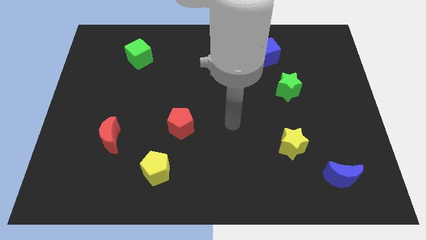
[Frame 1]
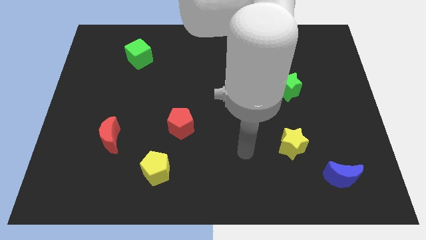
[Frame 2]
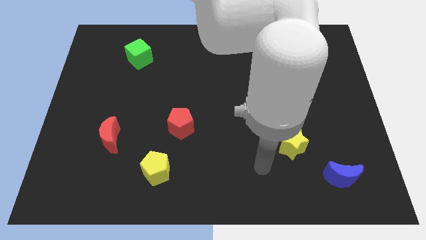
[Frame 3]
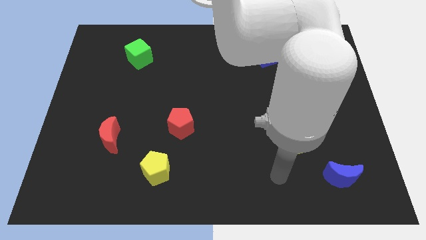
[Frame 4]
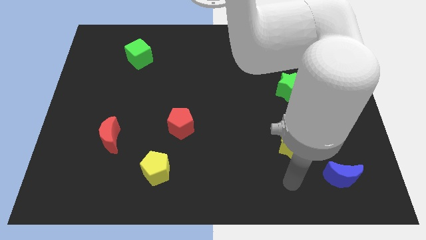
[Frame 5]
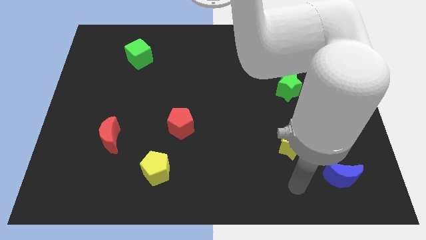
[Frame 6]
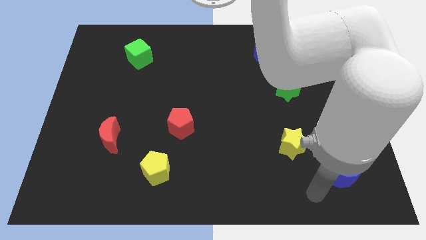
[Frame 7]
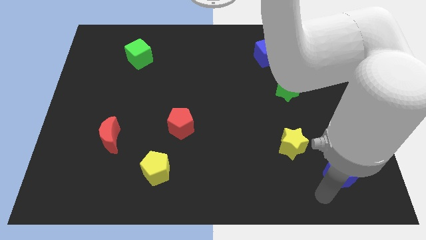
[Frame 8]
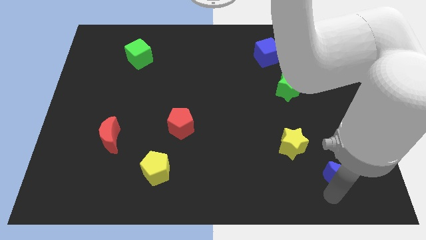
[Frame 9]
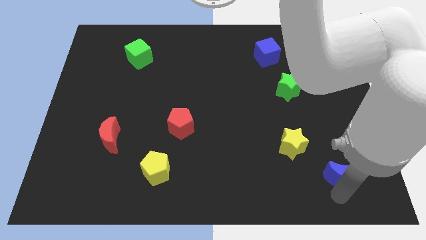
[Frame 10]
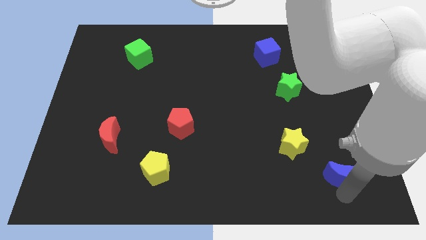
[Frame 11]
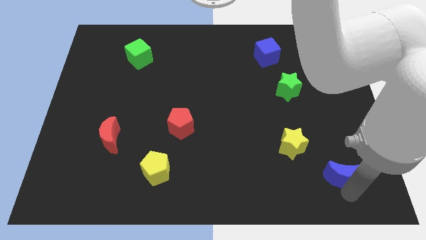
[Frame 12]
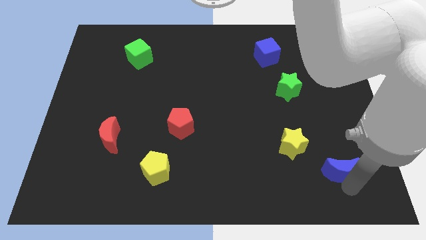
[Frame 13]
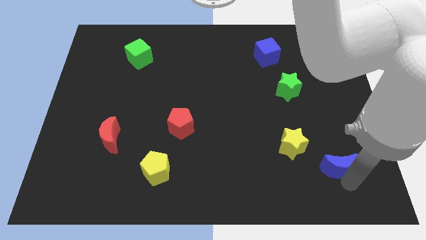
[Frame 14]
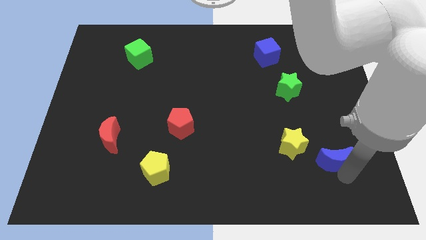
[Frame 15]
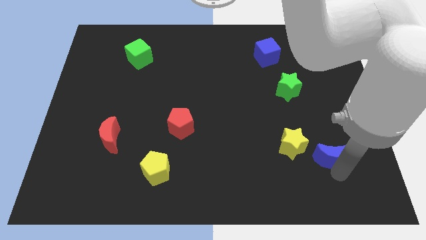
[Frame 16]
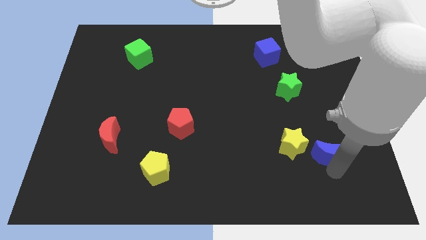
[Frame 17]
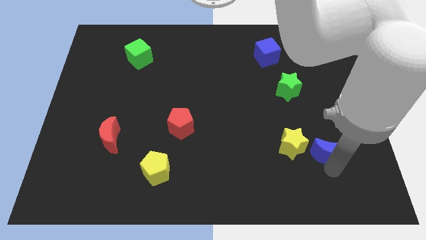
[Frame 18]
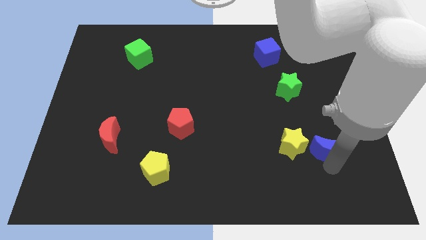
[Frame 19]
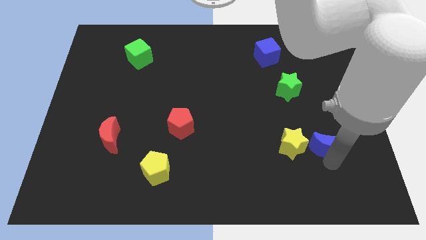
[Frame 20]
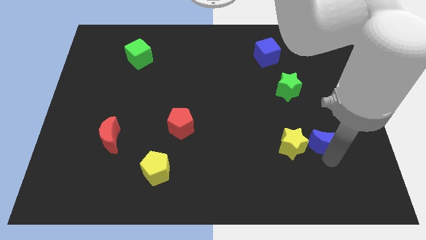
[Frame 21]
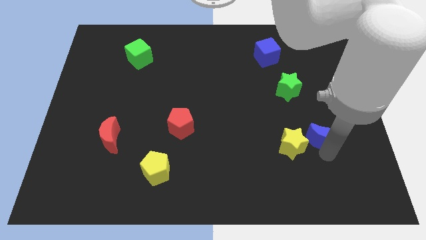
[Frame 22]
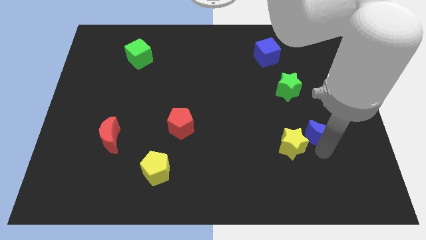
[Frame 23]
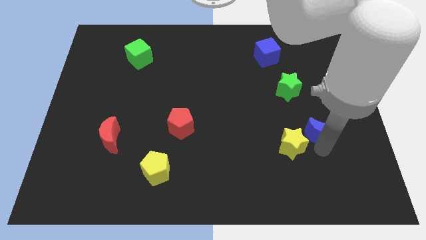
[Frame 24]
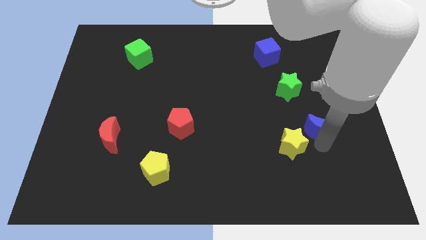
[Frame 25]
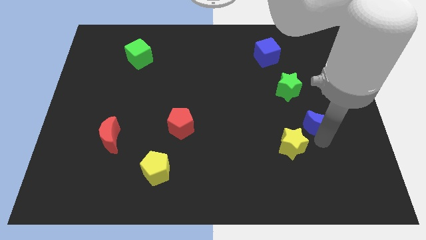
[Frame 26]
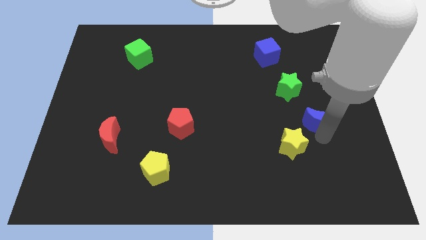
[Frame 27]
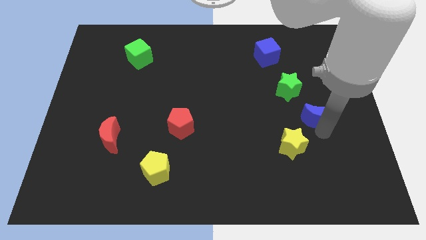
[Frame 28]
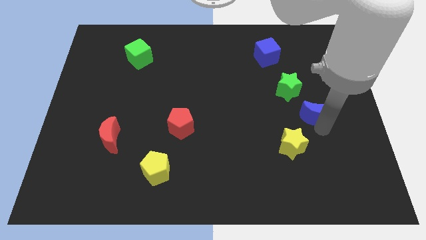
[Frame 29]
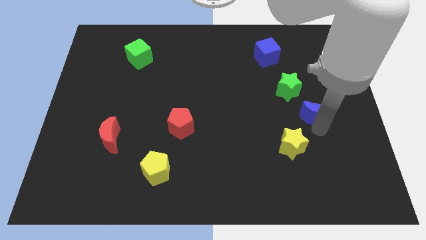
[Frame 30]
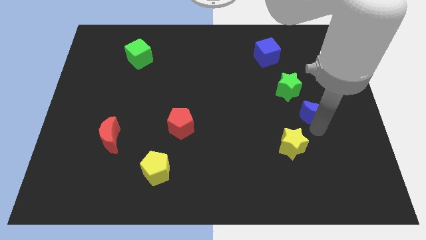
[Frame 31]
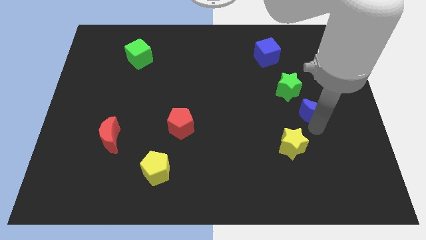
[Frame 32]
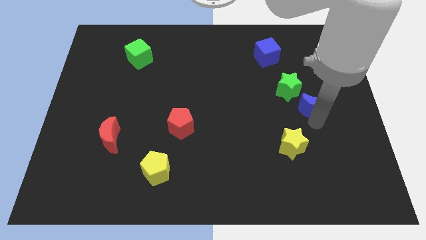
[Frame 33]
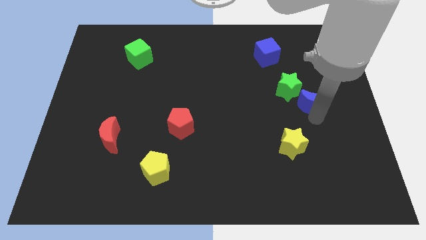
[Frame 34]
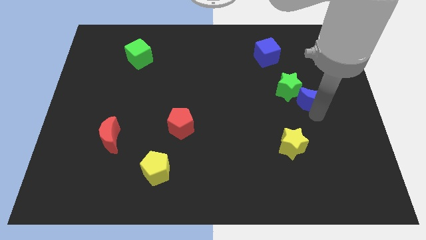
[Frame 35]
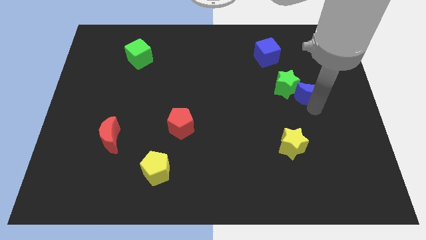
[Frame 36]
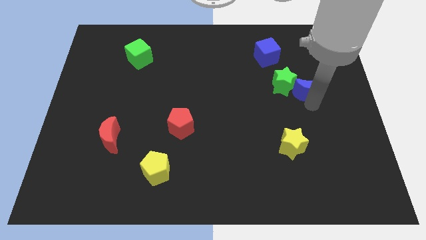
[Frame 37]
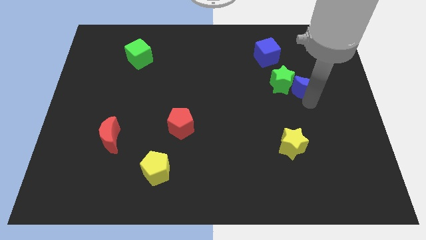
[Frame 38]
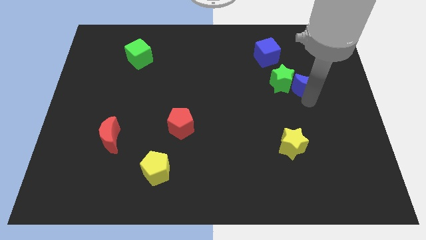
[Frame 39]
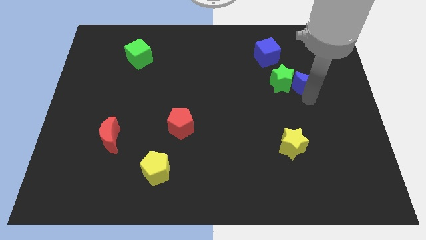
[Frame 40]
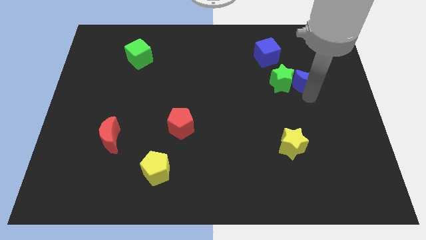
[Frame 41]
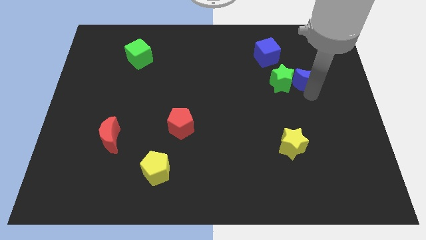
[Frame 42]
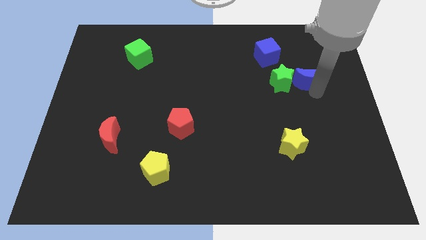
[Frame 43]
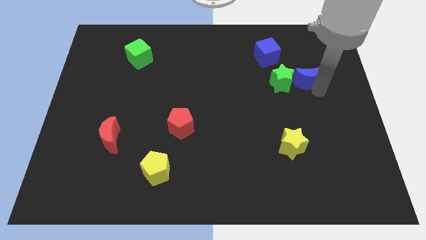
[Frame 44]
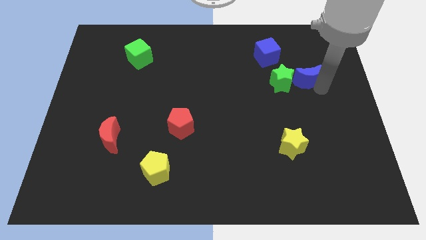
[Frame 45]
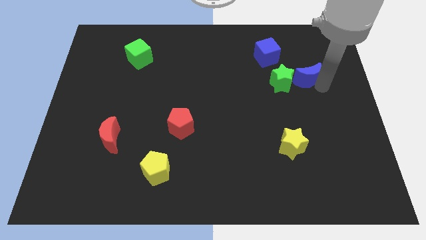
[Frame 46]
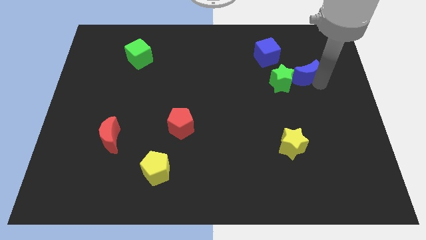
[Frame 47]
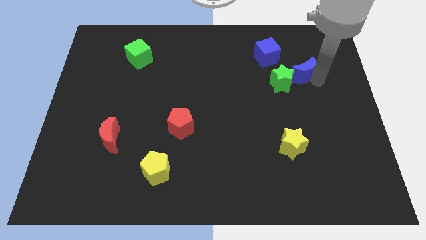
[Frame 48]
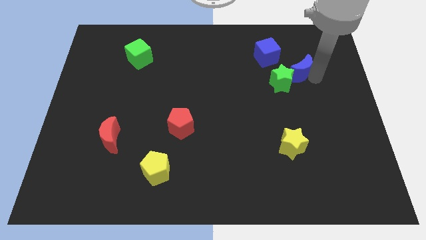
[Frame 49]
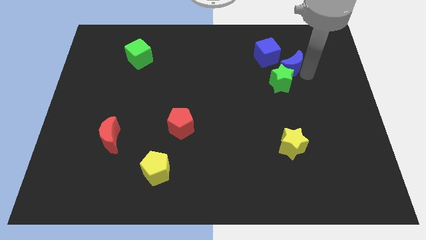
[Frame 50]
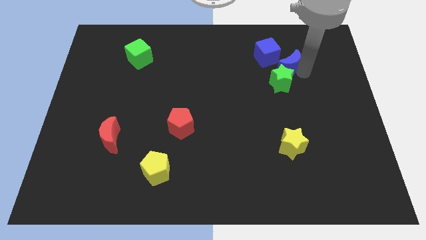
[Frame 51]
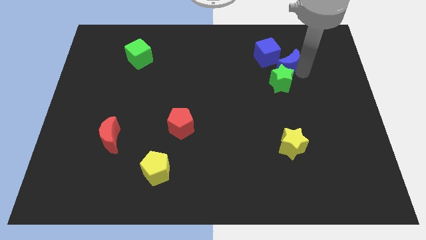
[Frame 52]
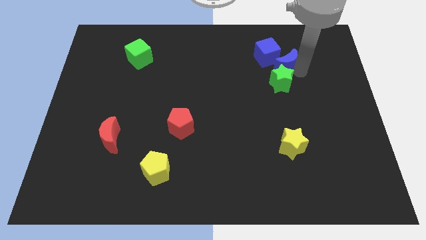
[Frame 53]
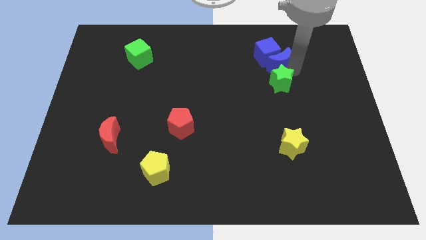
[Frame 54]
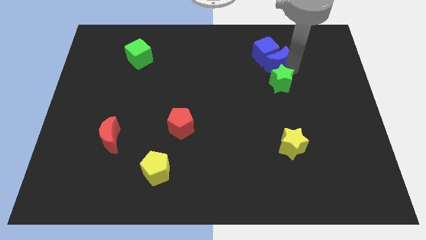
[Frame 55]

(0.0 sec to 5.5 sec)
slide the blue moon to the blue cube

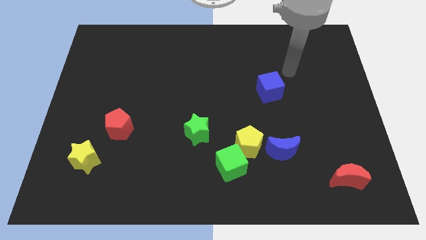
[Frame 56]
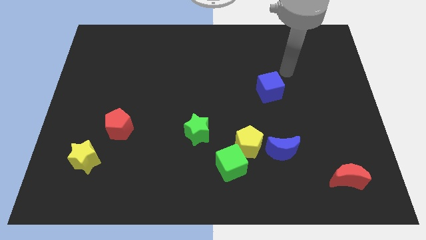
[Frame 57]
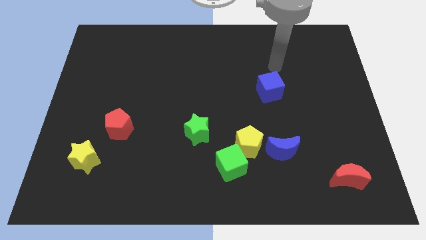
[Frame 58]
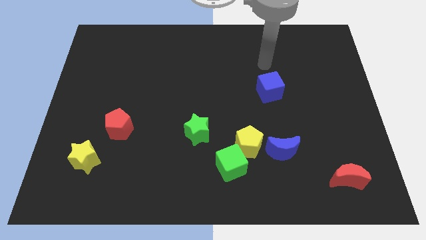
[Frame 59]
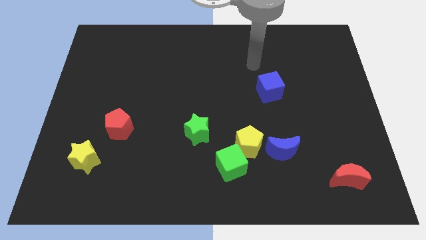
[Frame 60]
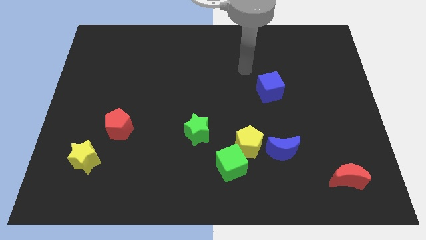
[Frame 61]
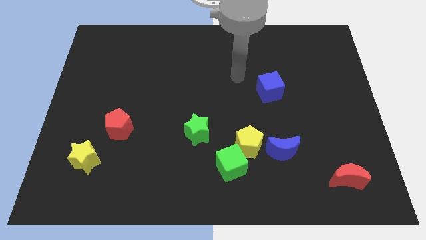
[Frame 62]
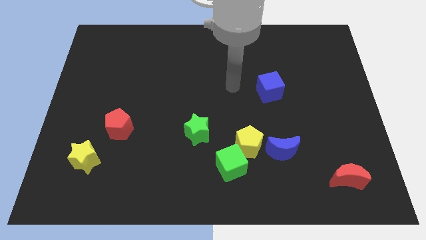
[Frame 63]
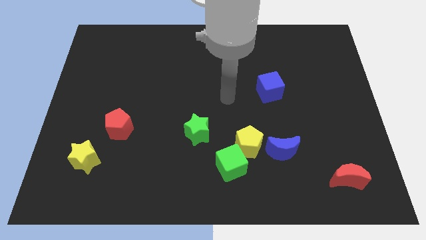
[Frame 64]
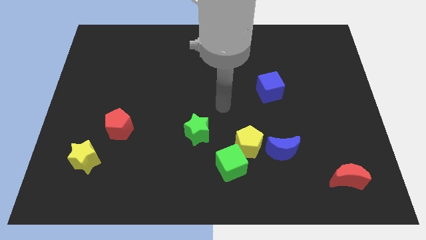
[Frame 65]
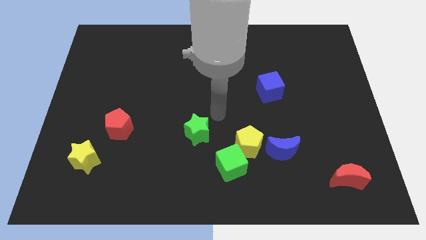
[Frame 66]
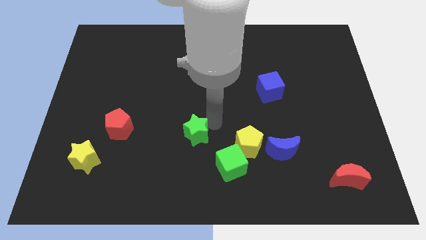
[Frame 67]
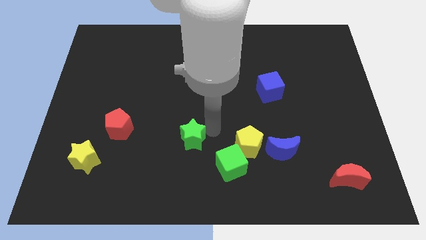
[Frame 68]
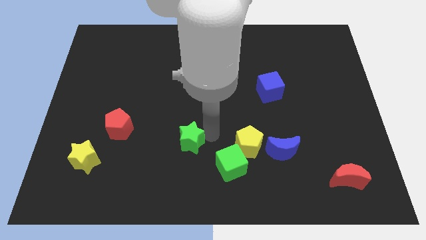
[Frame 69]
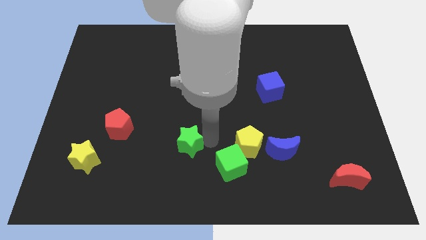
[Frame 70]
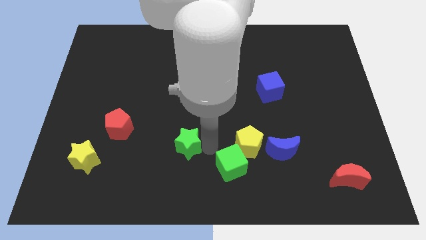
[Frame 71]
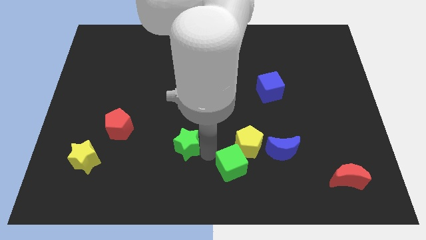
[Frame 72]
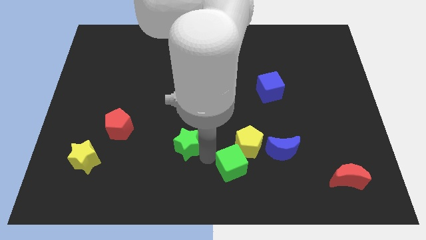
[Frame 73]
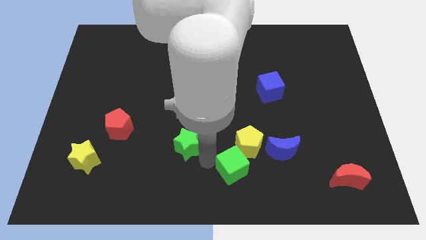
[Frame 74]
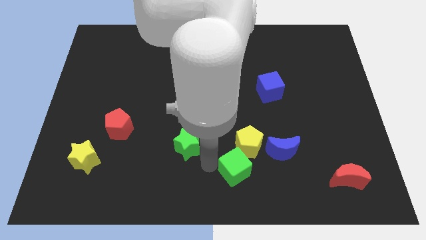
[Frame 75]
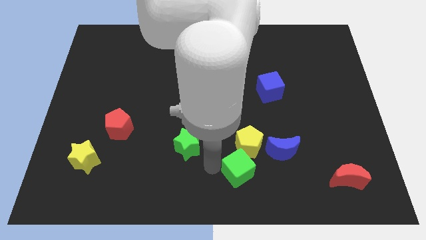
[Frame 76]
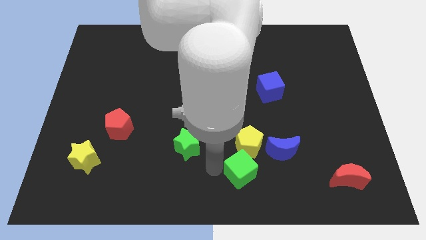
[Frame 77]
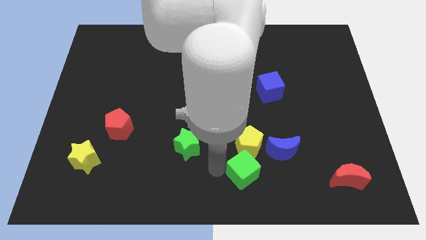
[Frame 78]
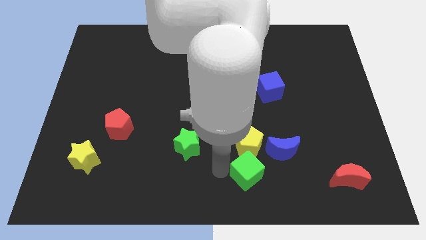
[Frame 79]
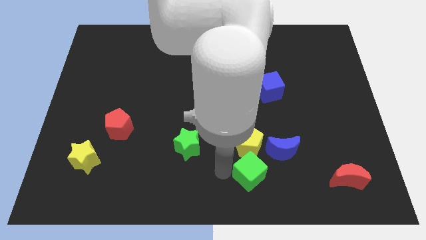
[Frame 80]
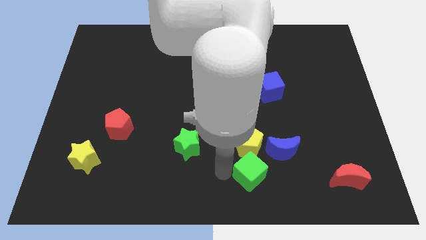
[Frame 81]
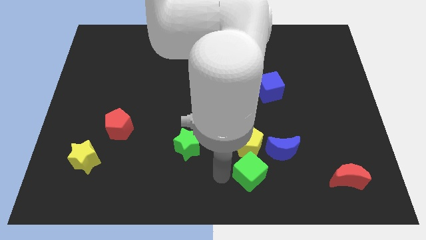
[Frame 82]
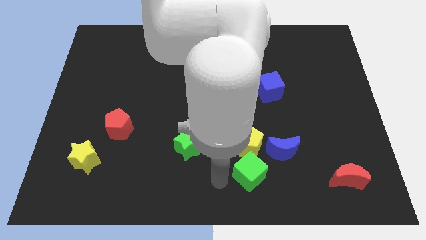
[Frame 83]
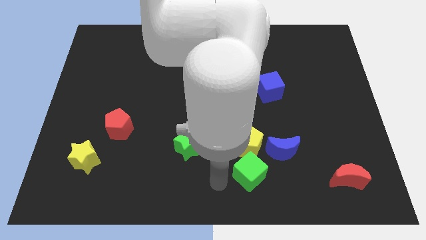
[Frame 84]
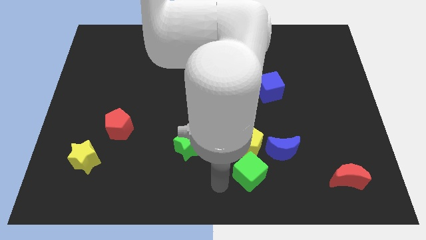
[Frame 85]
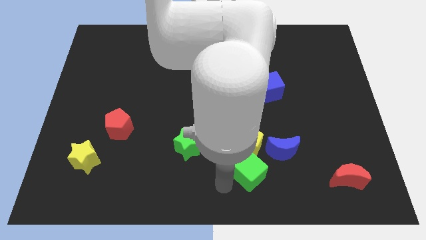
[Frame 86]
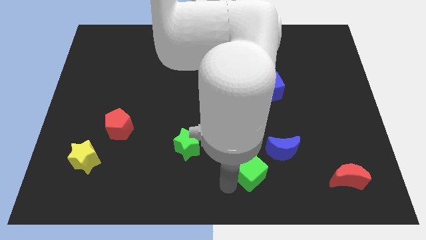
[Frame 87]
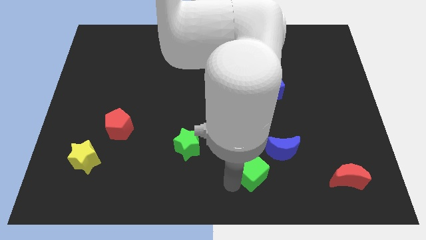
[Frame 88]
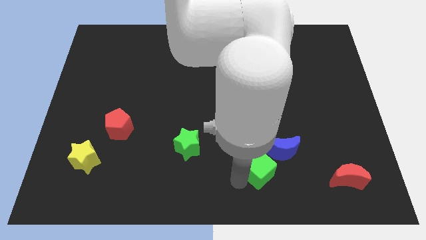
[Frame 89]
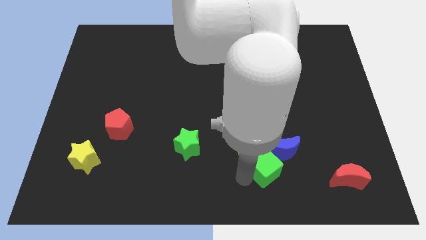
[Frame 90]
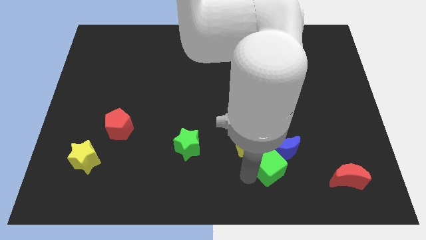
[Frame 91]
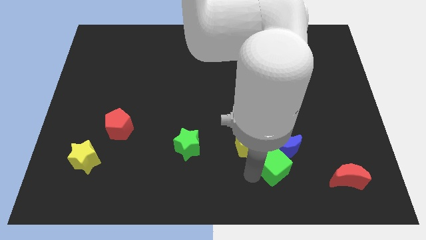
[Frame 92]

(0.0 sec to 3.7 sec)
push the green cube next to the blue moon
